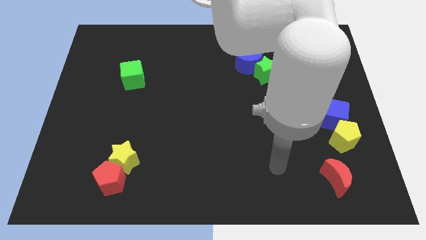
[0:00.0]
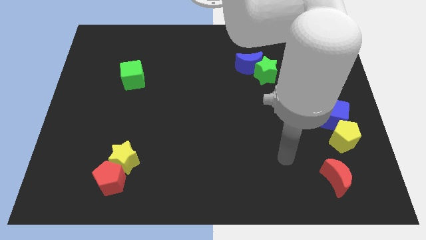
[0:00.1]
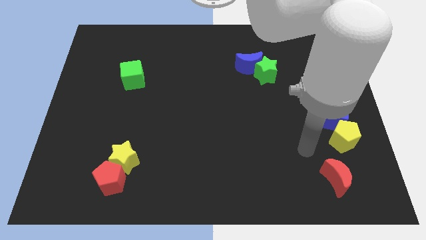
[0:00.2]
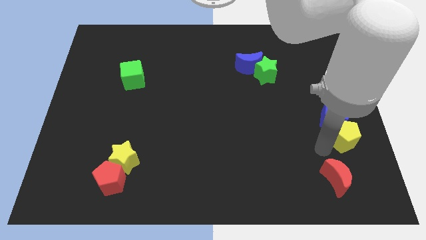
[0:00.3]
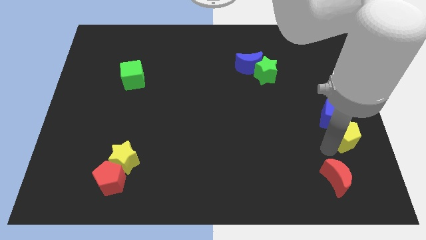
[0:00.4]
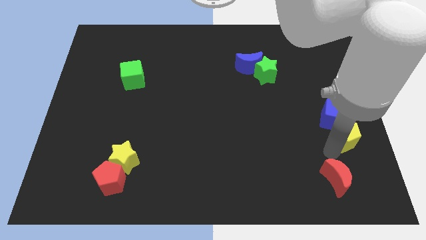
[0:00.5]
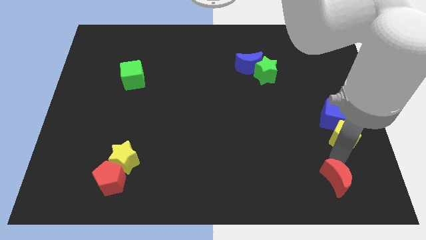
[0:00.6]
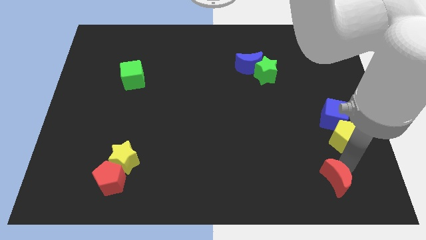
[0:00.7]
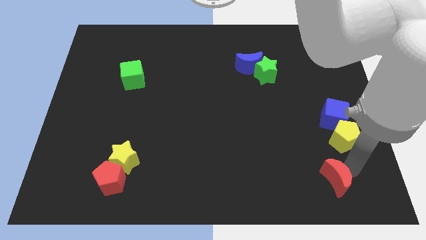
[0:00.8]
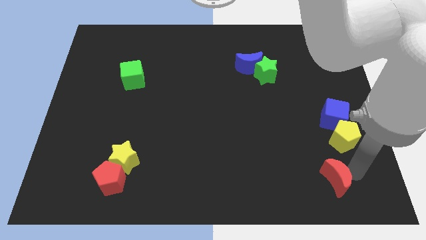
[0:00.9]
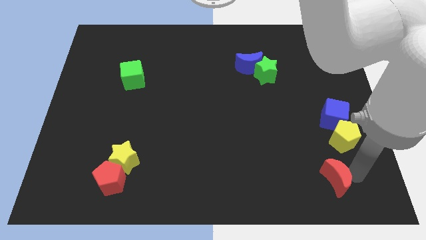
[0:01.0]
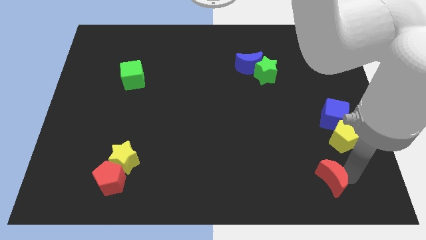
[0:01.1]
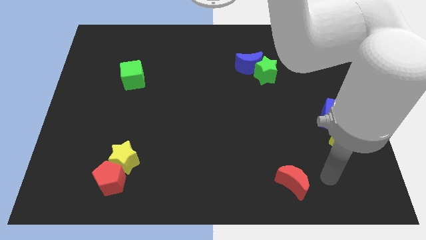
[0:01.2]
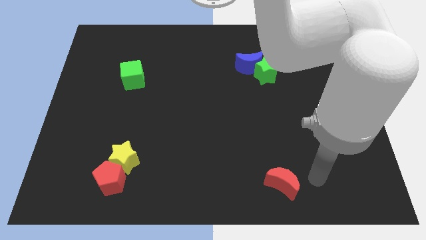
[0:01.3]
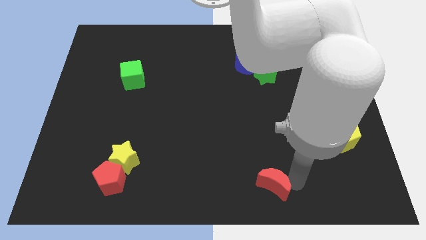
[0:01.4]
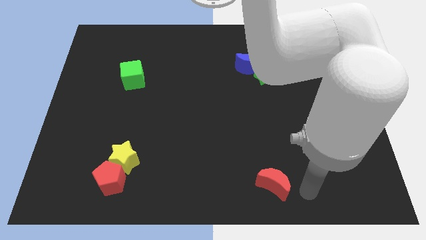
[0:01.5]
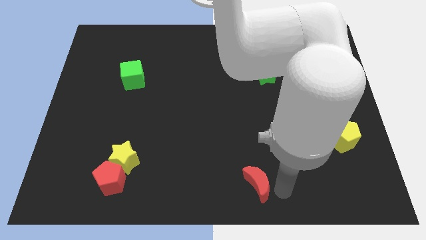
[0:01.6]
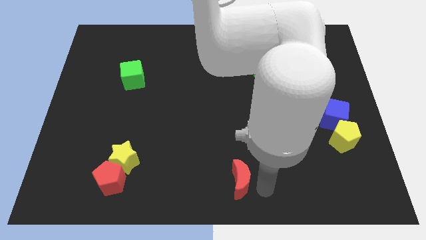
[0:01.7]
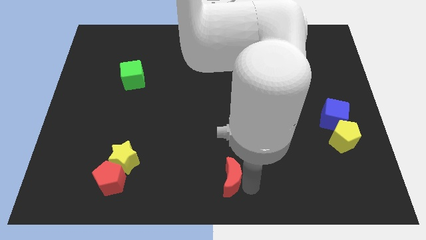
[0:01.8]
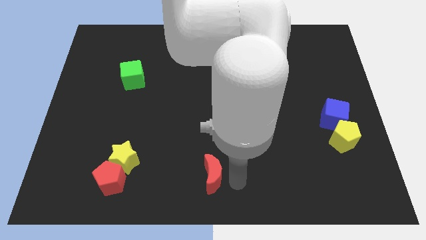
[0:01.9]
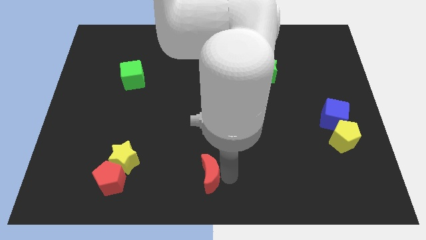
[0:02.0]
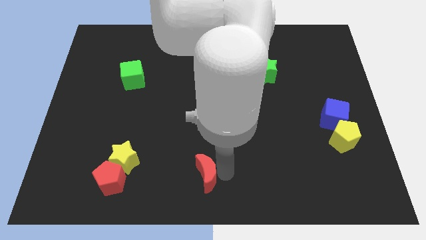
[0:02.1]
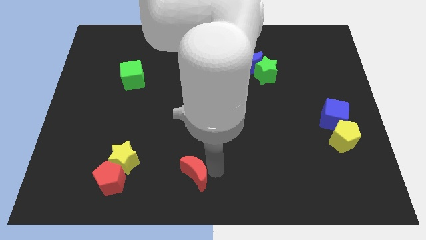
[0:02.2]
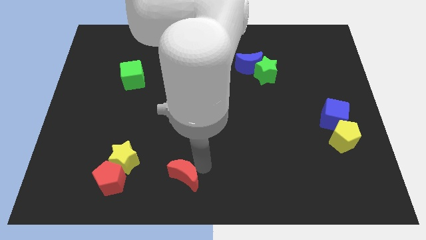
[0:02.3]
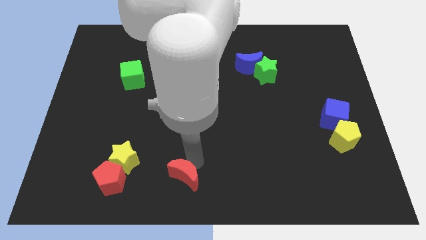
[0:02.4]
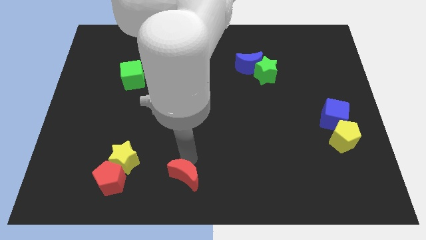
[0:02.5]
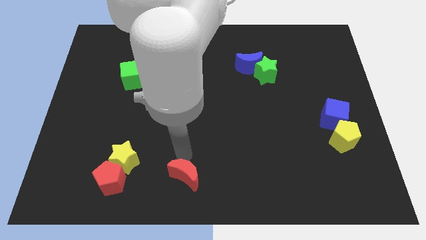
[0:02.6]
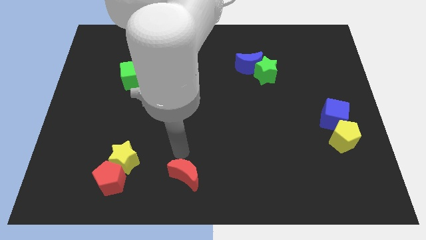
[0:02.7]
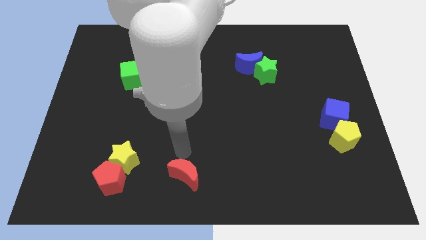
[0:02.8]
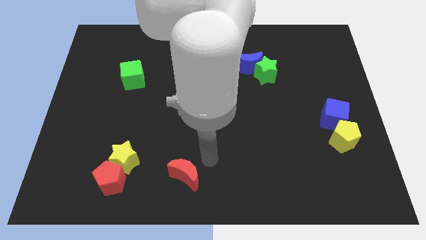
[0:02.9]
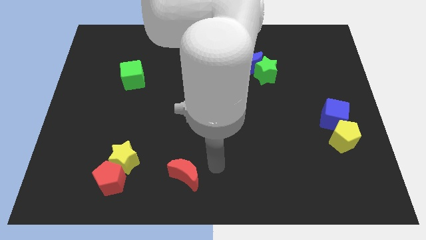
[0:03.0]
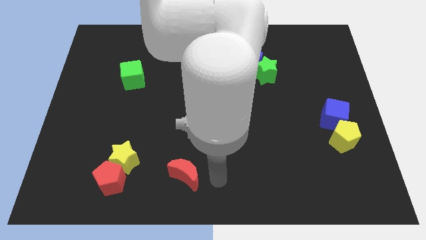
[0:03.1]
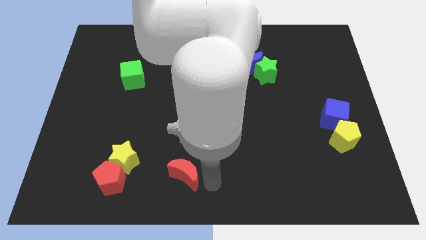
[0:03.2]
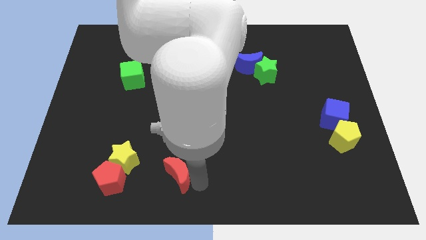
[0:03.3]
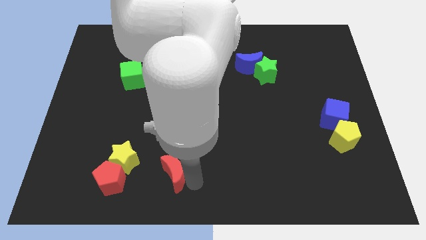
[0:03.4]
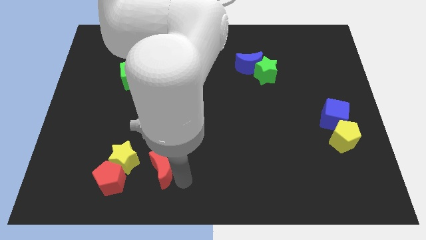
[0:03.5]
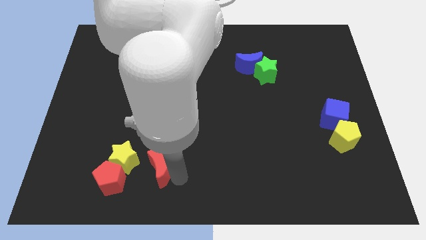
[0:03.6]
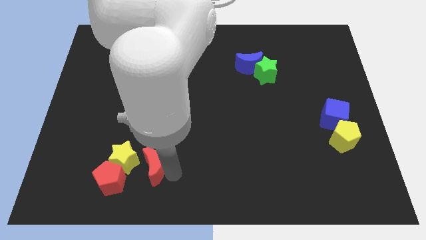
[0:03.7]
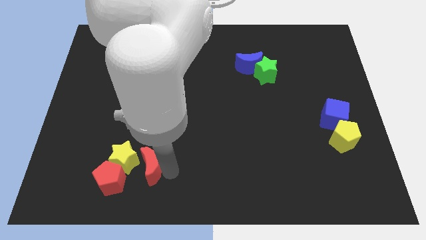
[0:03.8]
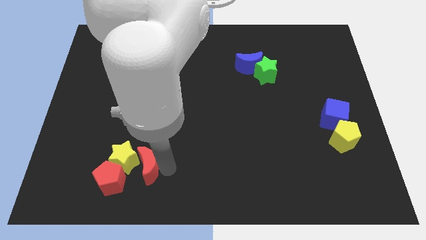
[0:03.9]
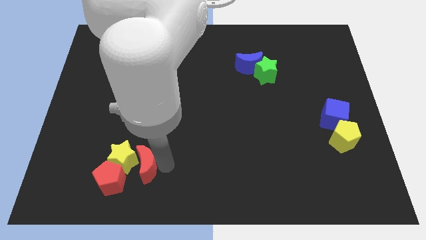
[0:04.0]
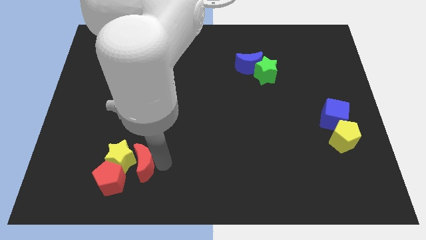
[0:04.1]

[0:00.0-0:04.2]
slide the red moon close to the yellow star

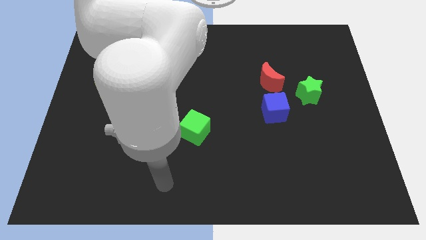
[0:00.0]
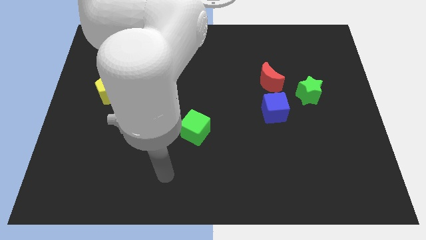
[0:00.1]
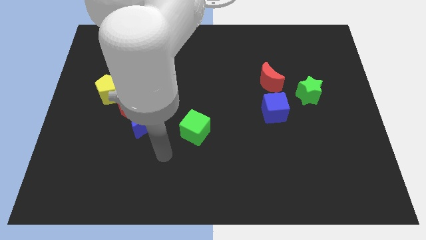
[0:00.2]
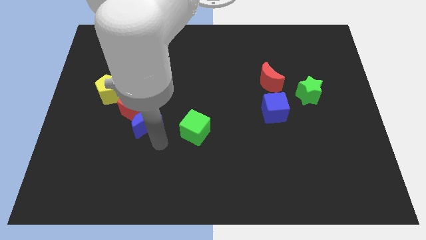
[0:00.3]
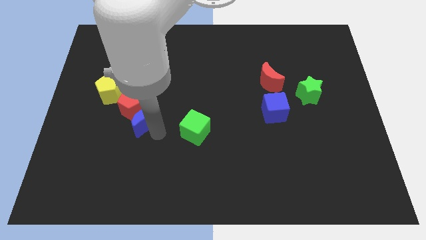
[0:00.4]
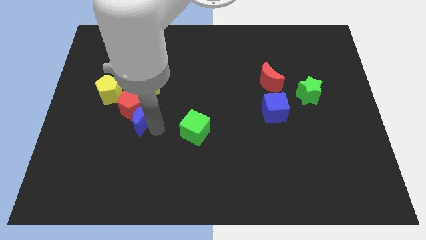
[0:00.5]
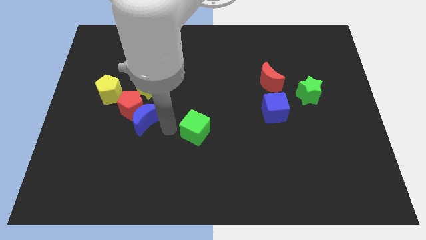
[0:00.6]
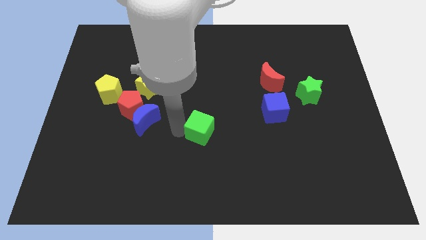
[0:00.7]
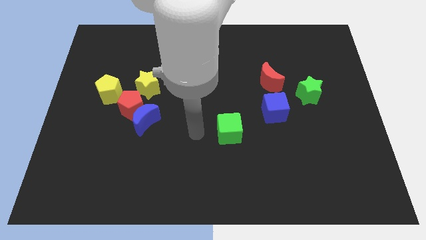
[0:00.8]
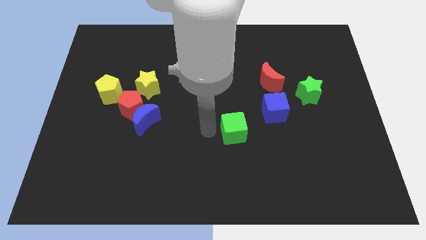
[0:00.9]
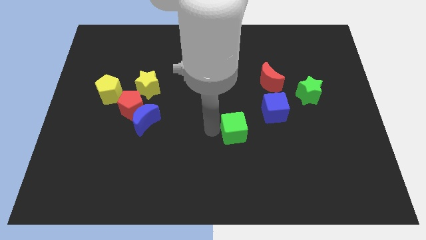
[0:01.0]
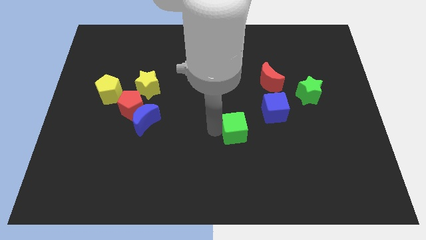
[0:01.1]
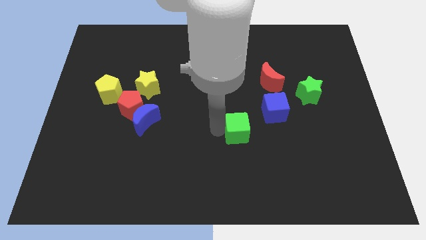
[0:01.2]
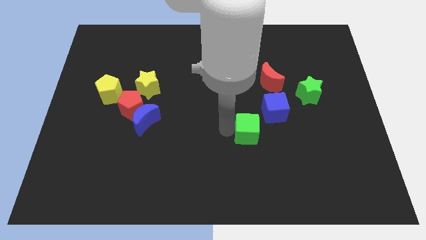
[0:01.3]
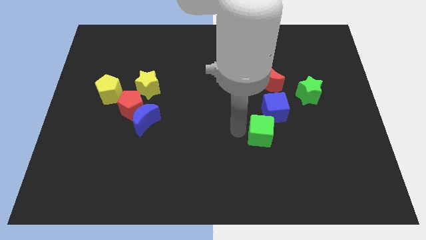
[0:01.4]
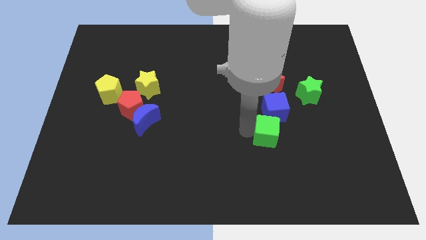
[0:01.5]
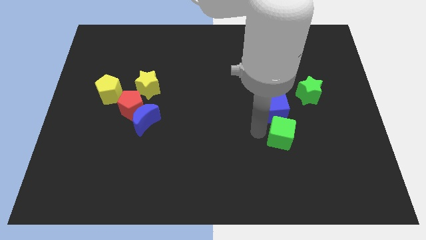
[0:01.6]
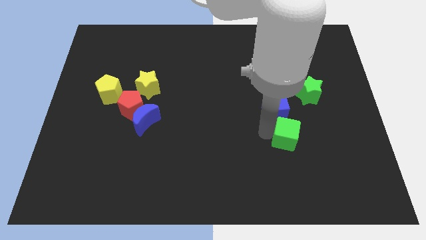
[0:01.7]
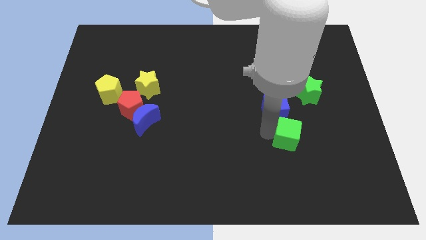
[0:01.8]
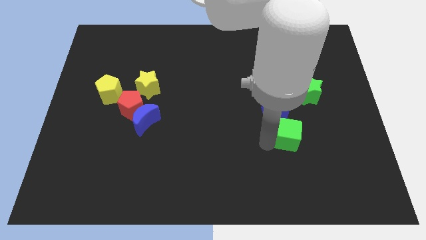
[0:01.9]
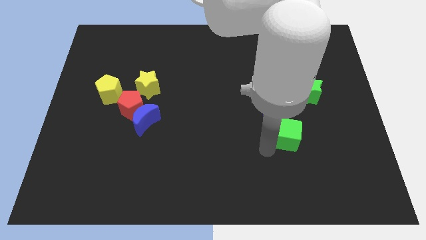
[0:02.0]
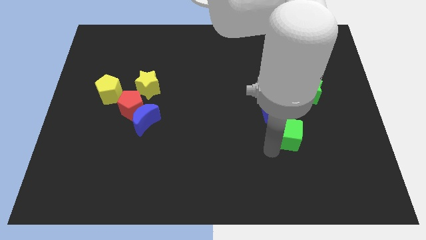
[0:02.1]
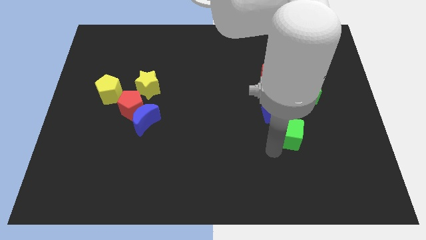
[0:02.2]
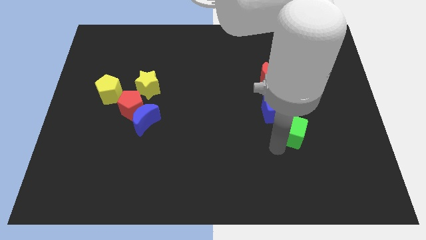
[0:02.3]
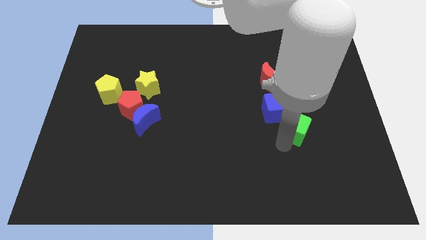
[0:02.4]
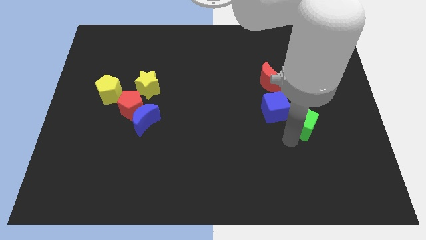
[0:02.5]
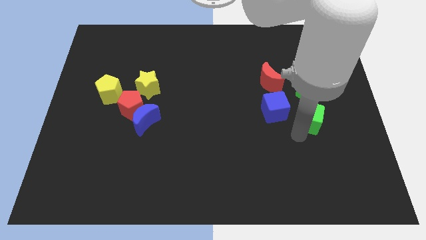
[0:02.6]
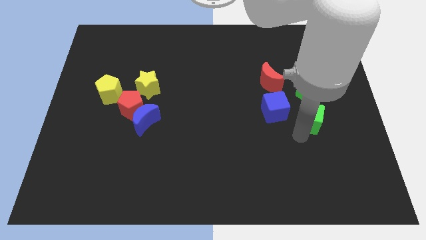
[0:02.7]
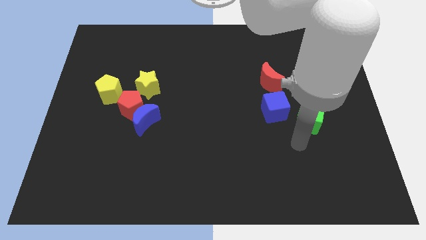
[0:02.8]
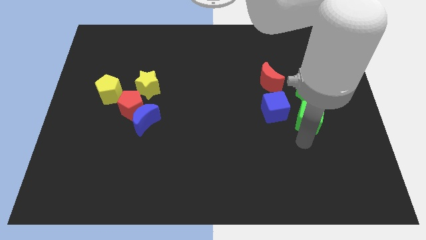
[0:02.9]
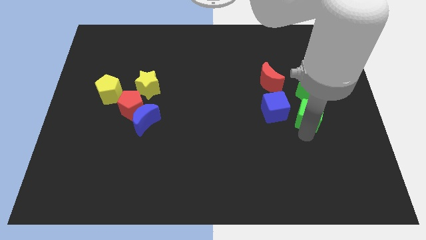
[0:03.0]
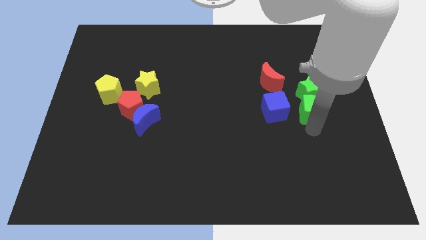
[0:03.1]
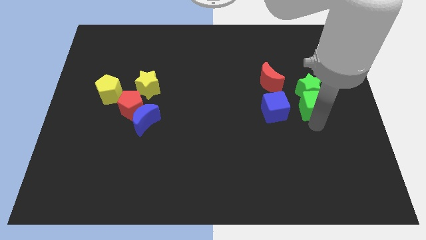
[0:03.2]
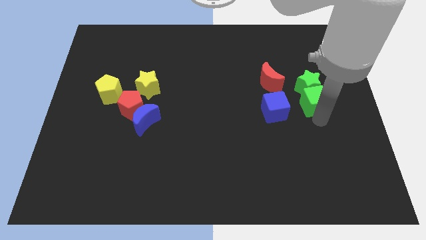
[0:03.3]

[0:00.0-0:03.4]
slide the green cube towards the green star

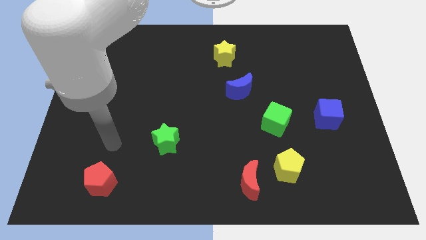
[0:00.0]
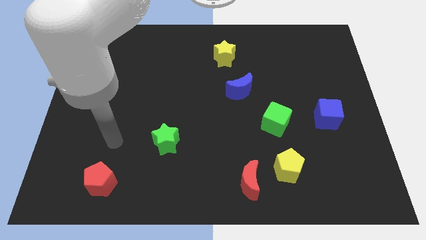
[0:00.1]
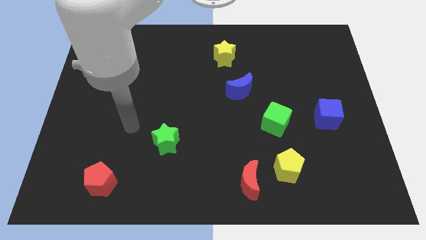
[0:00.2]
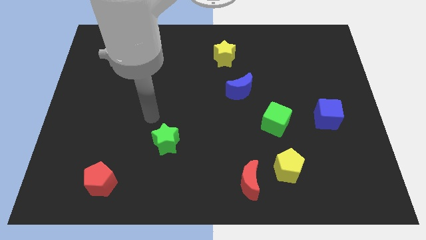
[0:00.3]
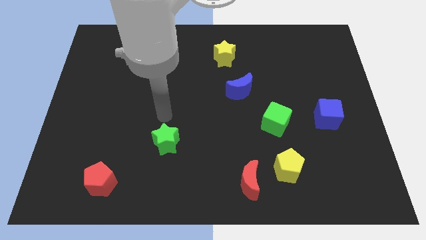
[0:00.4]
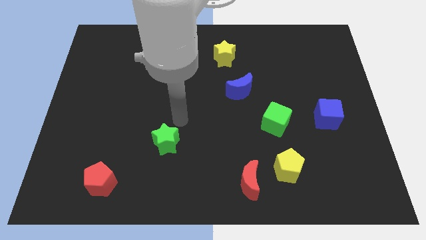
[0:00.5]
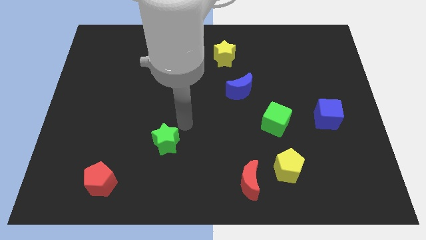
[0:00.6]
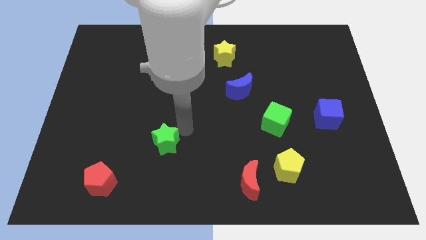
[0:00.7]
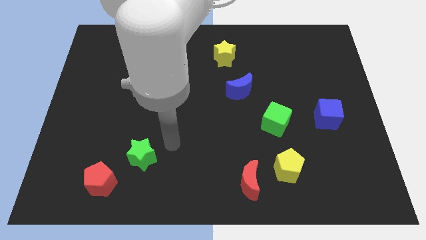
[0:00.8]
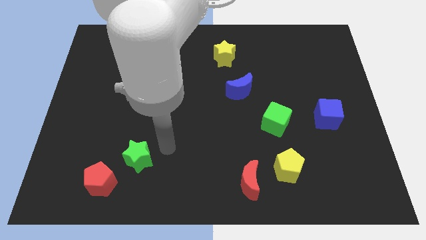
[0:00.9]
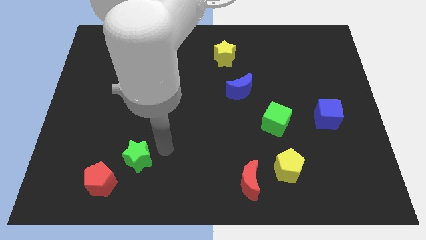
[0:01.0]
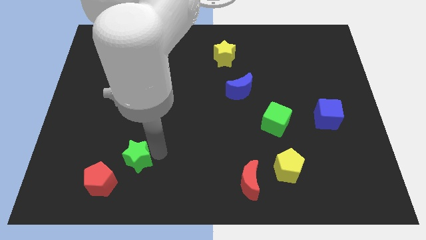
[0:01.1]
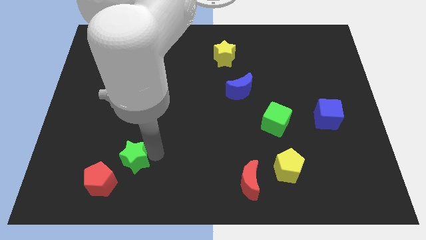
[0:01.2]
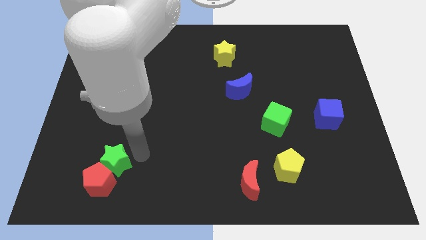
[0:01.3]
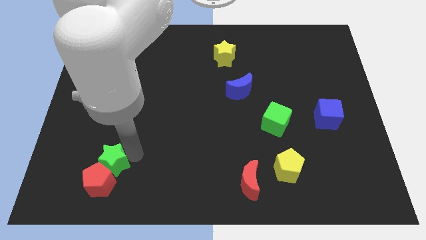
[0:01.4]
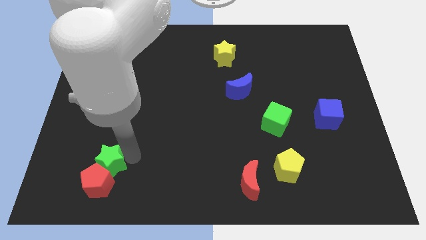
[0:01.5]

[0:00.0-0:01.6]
push the green star to the red pentagon
